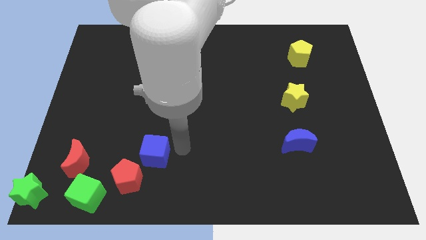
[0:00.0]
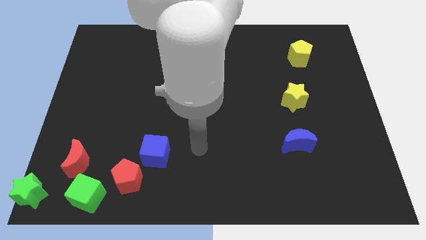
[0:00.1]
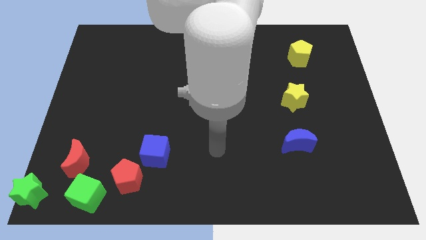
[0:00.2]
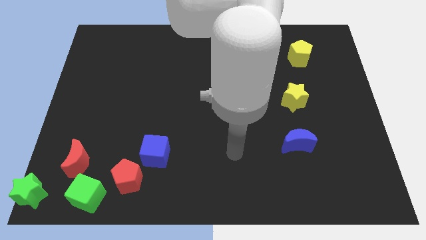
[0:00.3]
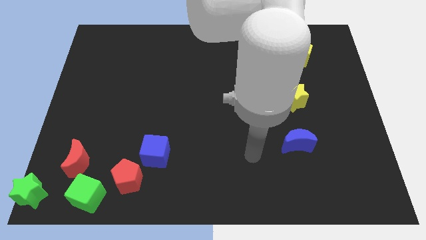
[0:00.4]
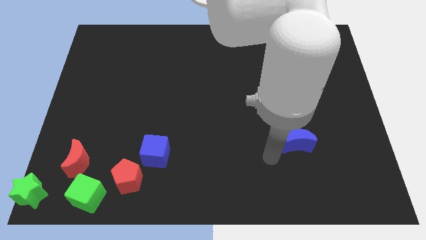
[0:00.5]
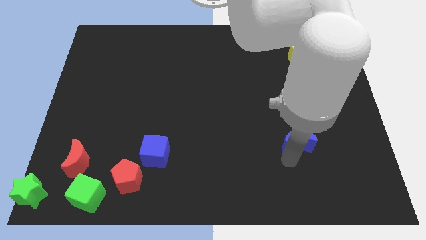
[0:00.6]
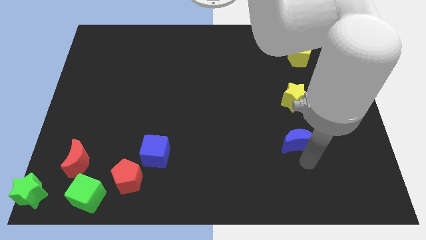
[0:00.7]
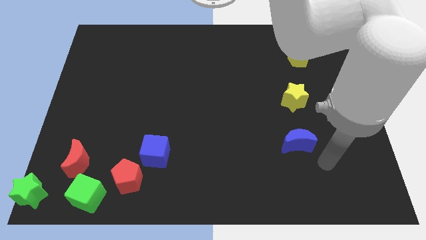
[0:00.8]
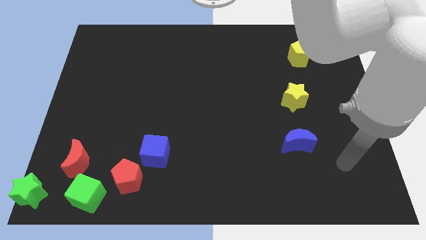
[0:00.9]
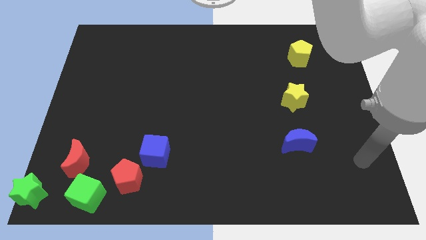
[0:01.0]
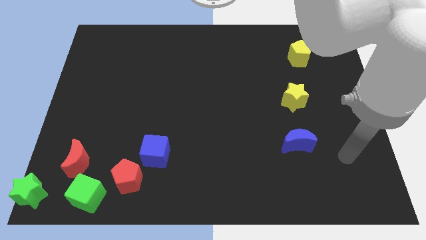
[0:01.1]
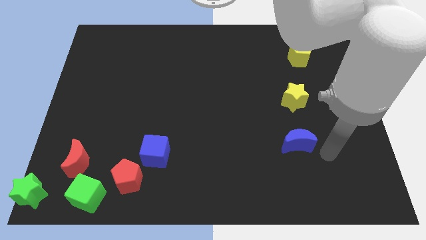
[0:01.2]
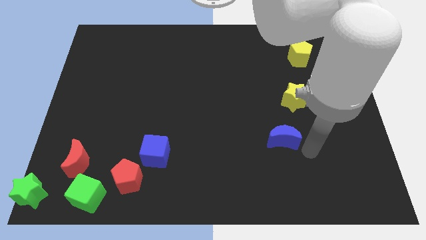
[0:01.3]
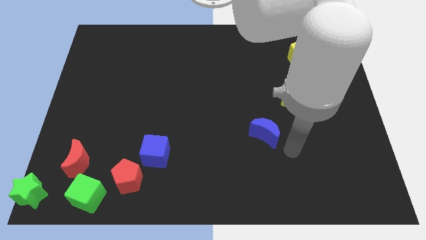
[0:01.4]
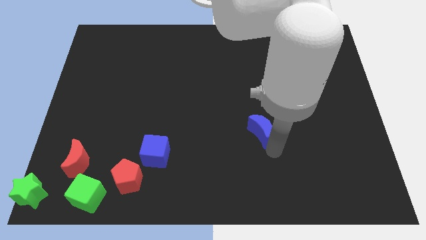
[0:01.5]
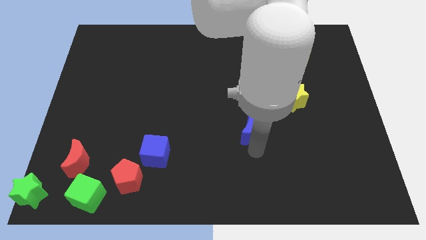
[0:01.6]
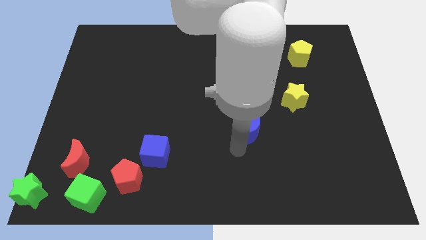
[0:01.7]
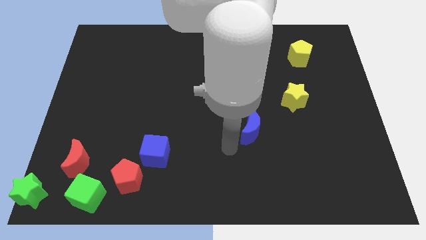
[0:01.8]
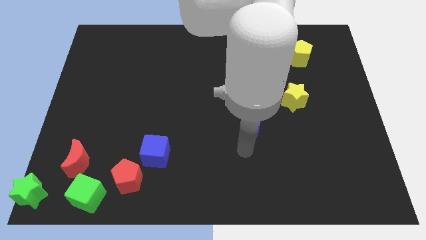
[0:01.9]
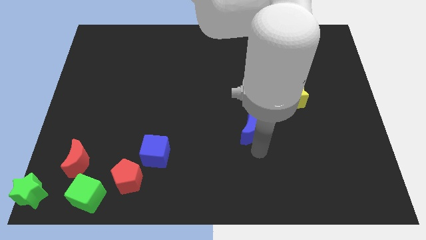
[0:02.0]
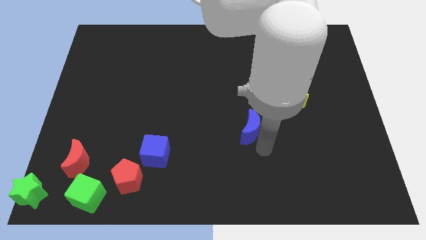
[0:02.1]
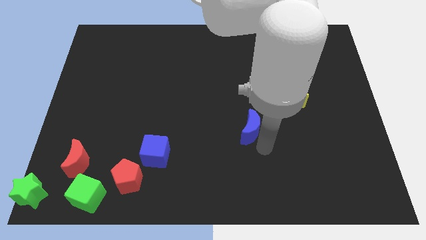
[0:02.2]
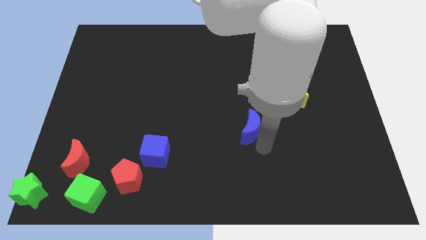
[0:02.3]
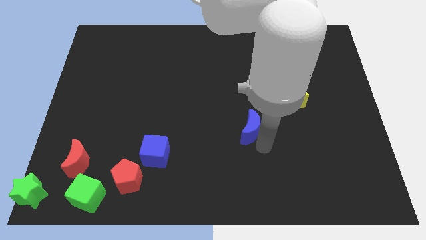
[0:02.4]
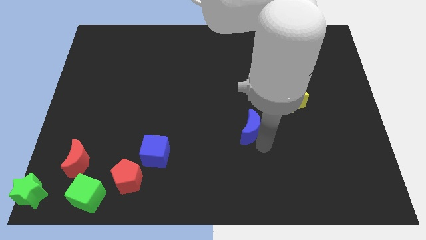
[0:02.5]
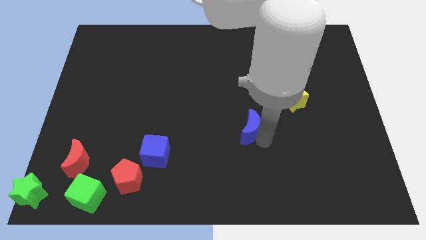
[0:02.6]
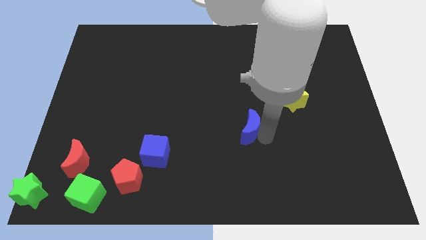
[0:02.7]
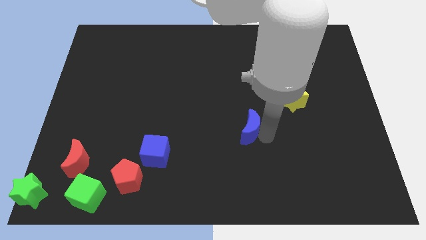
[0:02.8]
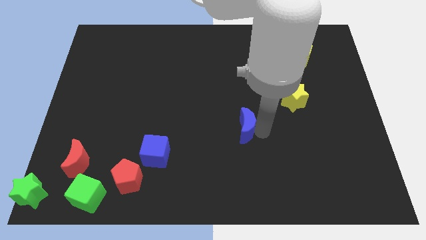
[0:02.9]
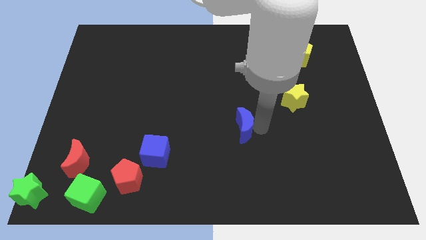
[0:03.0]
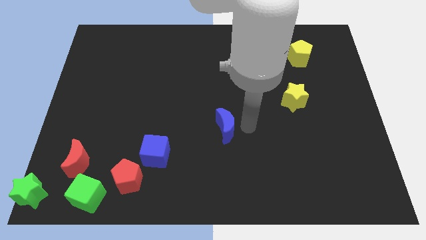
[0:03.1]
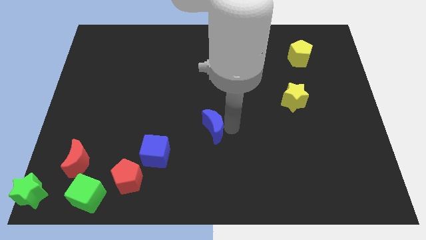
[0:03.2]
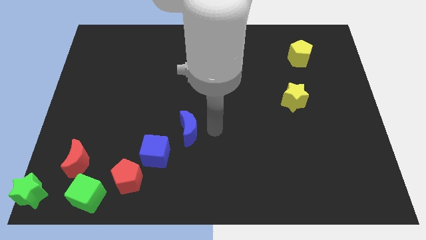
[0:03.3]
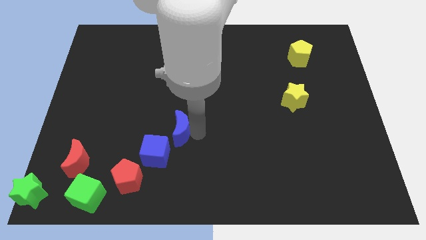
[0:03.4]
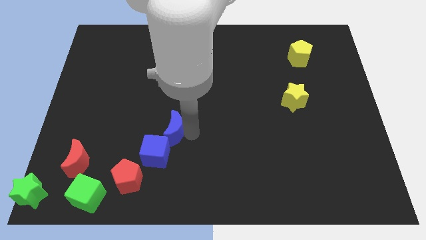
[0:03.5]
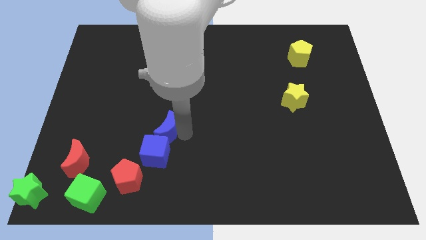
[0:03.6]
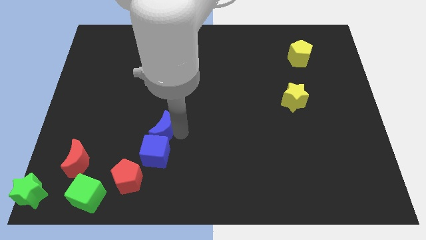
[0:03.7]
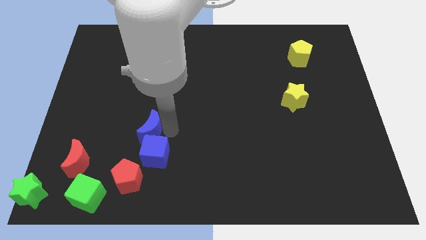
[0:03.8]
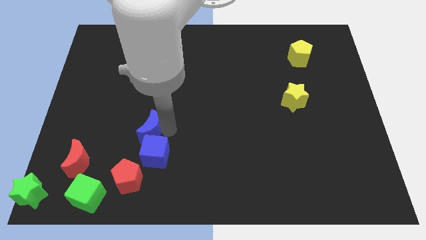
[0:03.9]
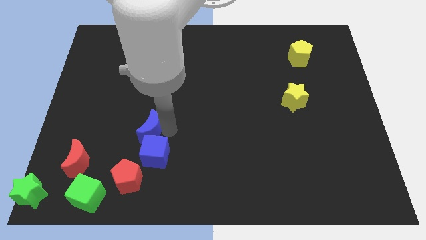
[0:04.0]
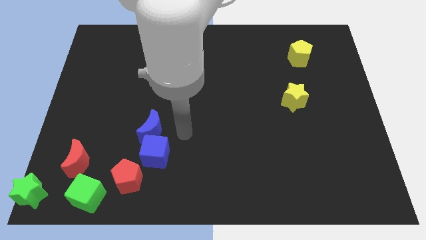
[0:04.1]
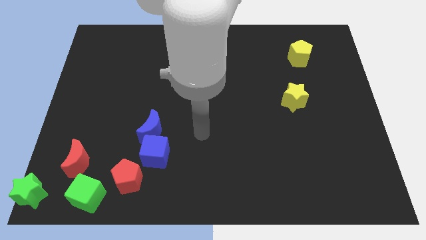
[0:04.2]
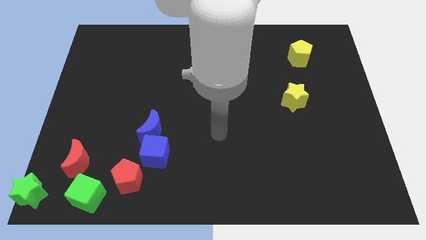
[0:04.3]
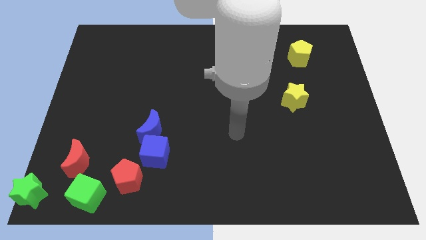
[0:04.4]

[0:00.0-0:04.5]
place the blue moon above the blue cube

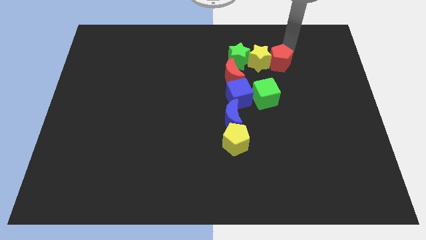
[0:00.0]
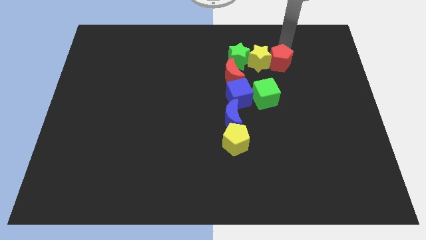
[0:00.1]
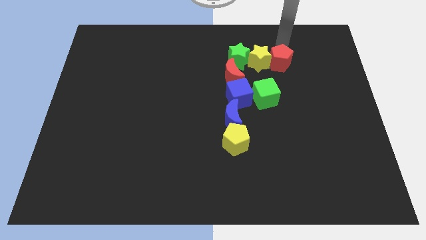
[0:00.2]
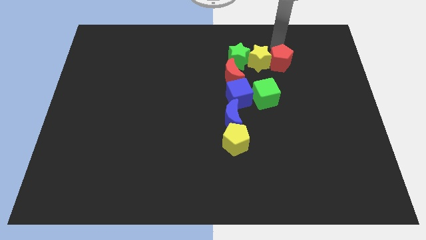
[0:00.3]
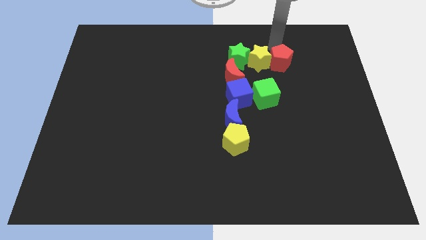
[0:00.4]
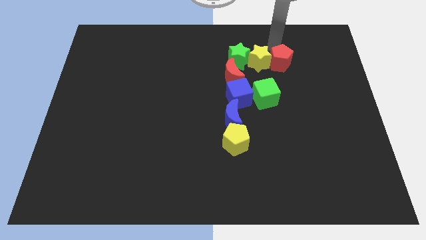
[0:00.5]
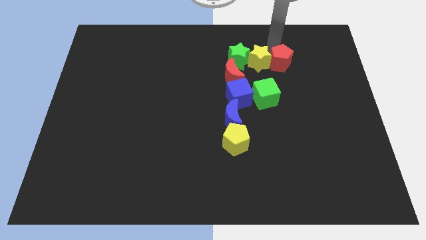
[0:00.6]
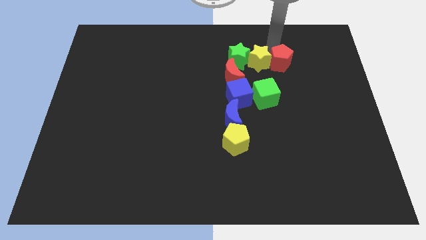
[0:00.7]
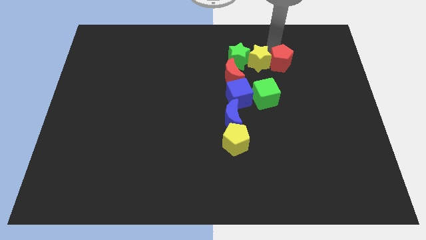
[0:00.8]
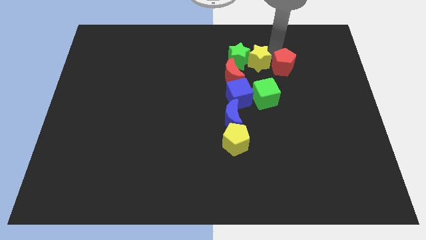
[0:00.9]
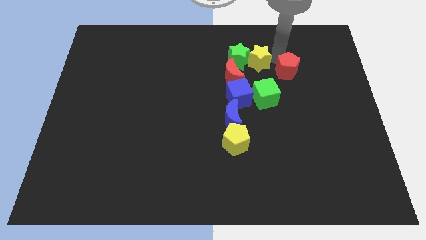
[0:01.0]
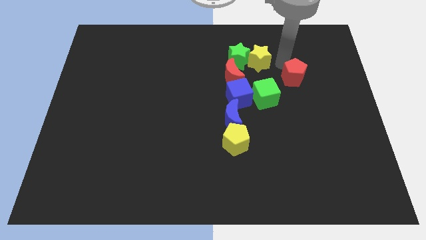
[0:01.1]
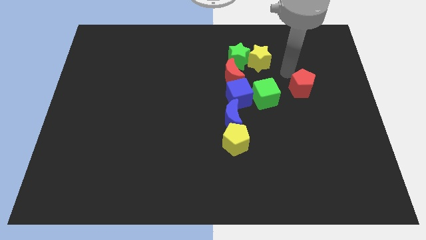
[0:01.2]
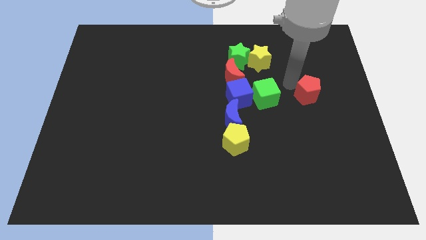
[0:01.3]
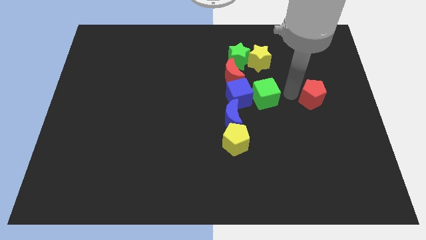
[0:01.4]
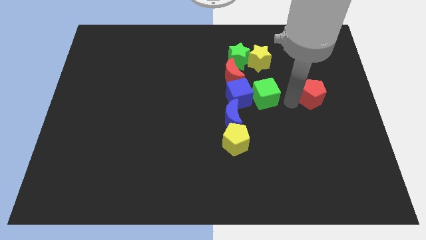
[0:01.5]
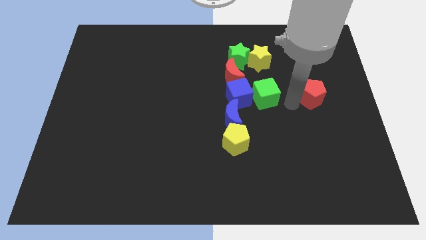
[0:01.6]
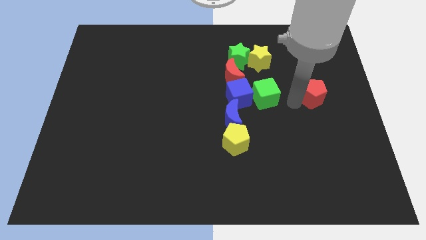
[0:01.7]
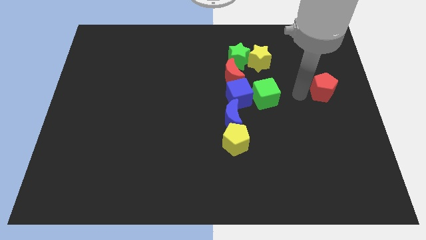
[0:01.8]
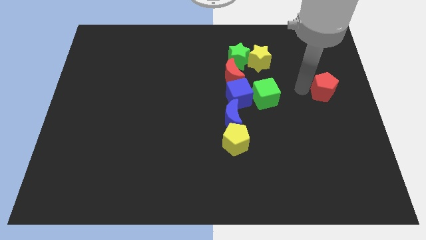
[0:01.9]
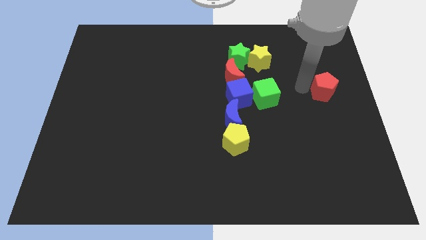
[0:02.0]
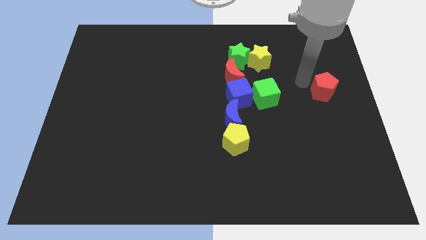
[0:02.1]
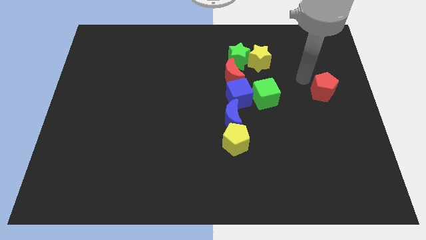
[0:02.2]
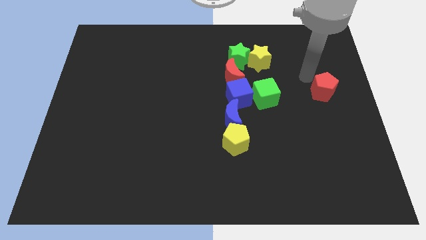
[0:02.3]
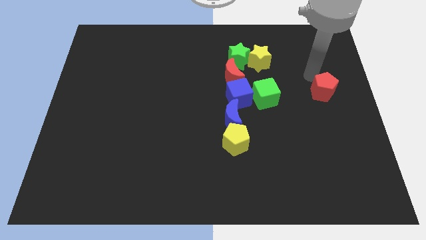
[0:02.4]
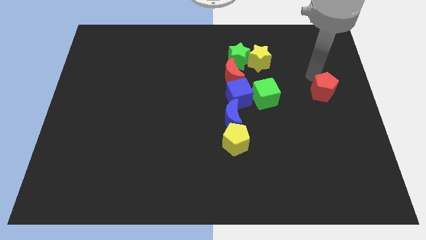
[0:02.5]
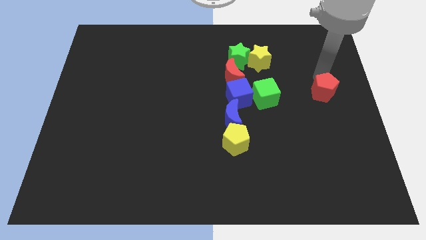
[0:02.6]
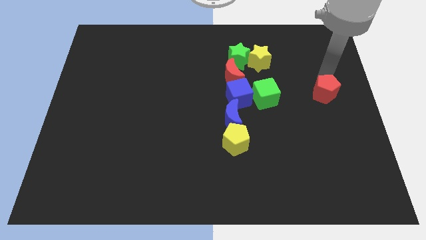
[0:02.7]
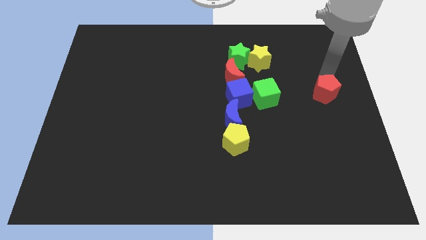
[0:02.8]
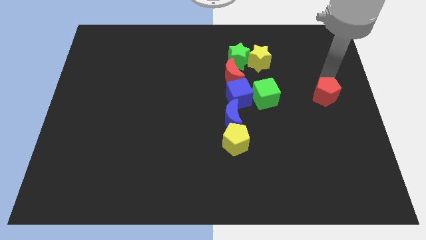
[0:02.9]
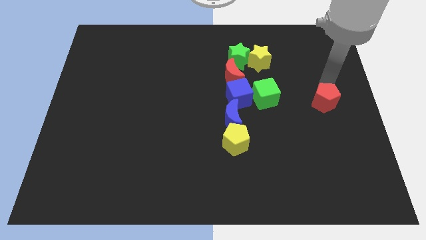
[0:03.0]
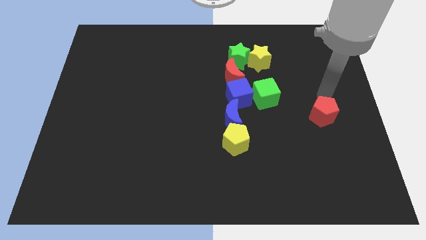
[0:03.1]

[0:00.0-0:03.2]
move the red pentagon towards the left center

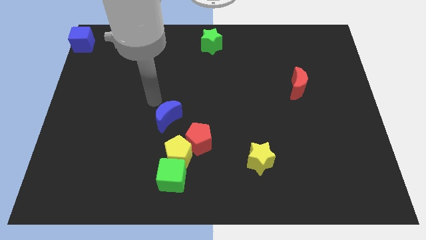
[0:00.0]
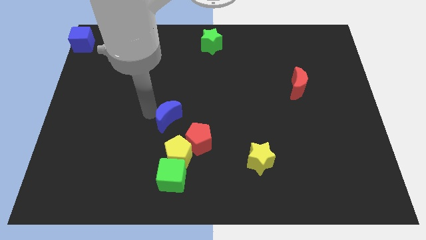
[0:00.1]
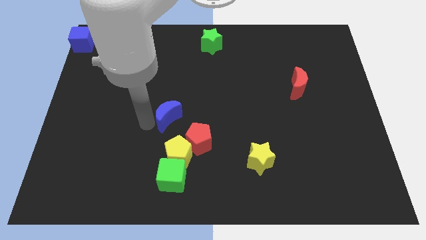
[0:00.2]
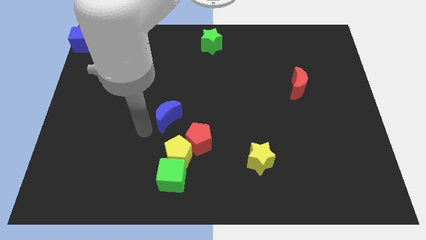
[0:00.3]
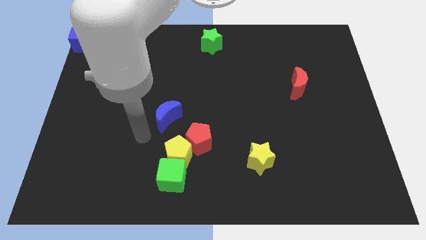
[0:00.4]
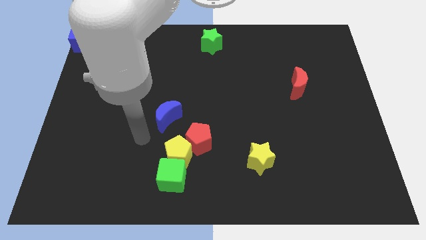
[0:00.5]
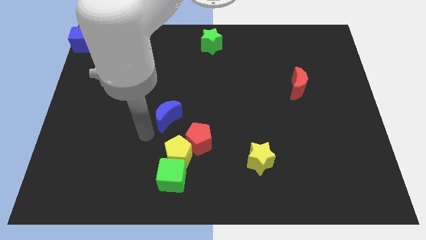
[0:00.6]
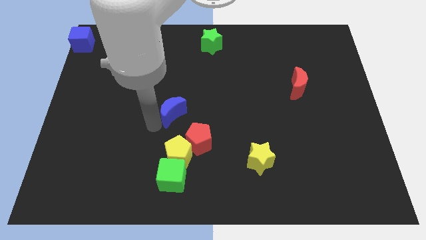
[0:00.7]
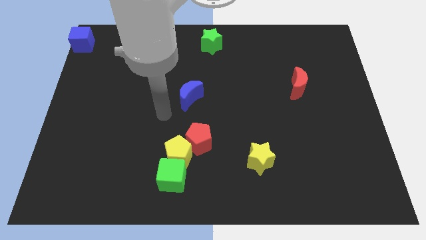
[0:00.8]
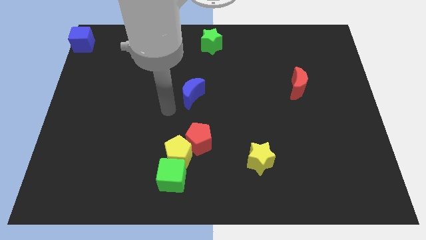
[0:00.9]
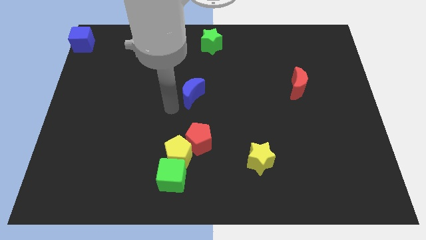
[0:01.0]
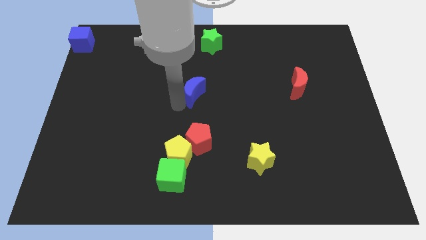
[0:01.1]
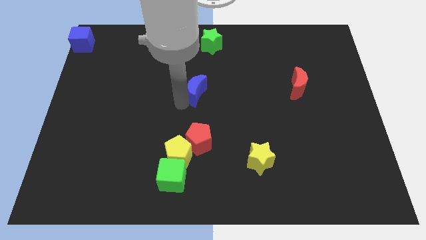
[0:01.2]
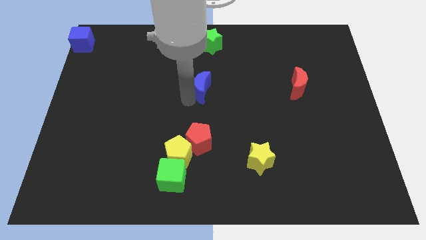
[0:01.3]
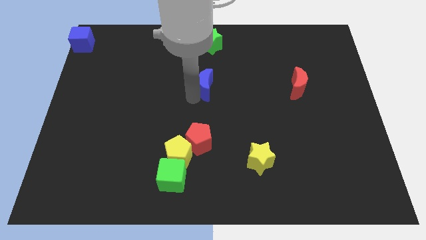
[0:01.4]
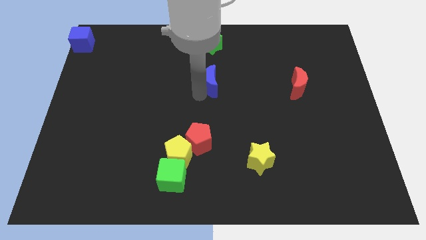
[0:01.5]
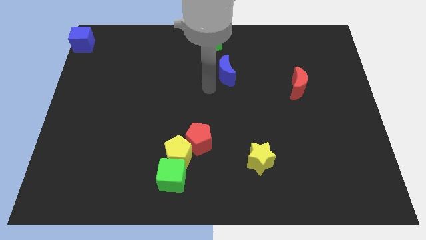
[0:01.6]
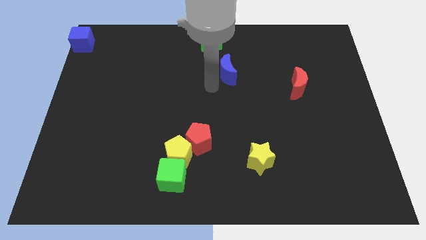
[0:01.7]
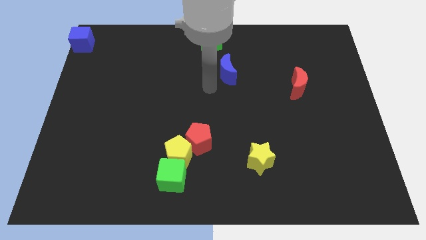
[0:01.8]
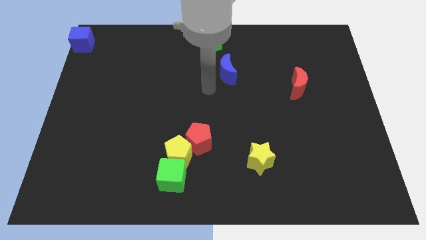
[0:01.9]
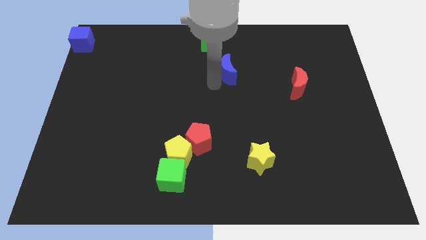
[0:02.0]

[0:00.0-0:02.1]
place the blue moon below the green star
